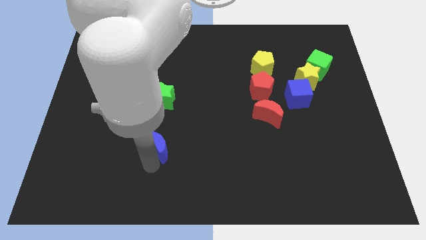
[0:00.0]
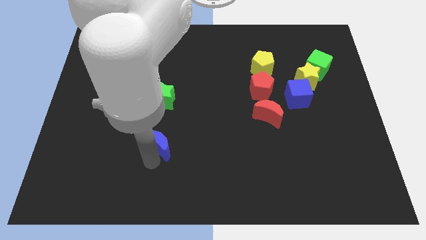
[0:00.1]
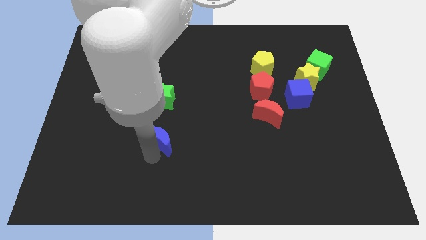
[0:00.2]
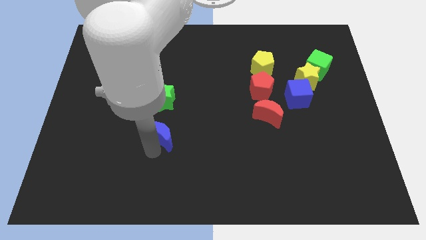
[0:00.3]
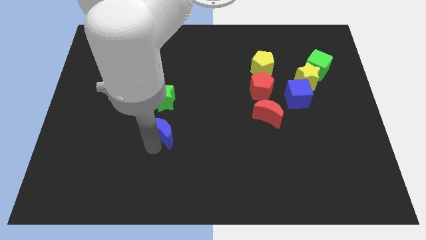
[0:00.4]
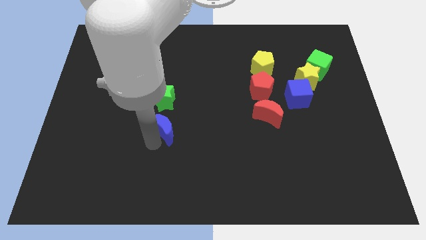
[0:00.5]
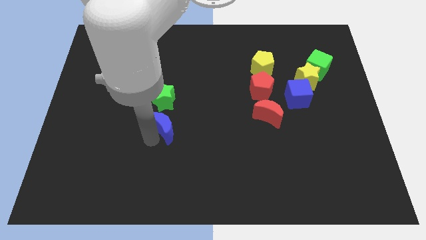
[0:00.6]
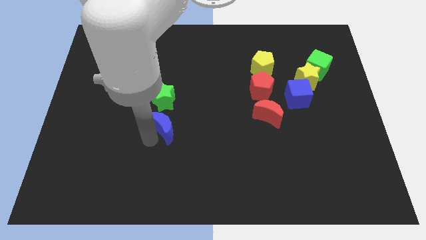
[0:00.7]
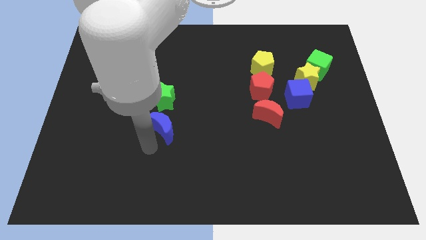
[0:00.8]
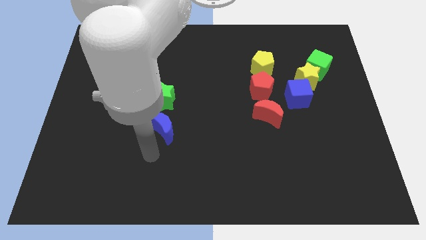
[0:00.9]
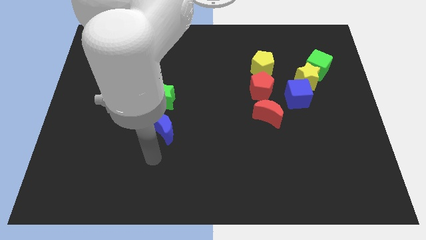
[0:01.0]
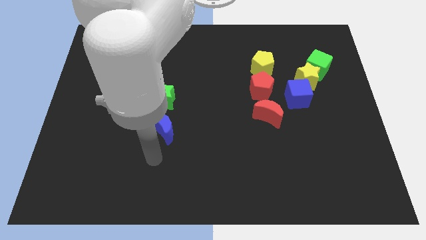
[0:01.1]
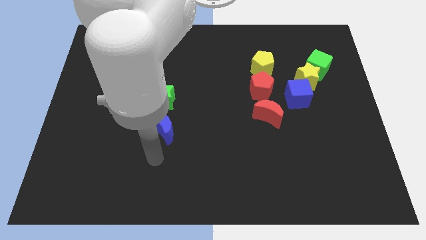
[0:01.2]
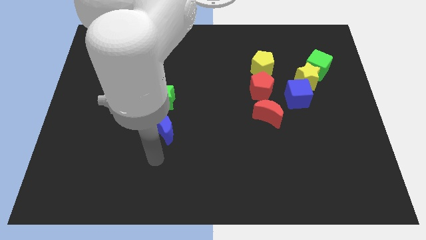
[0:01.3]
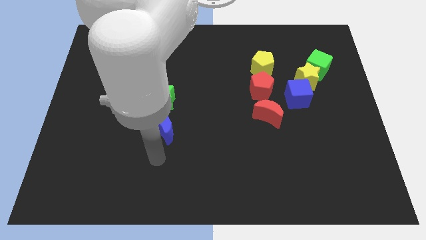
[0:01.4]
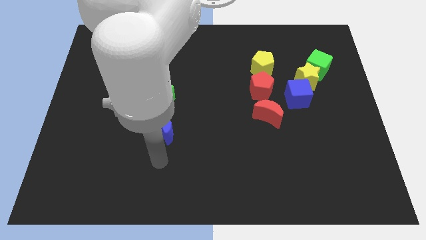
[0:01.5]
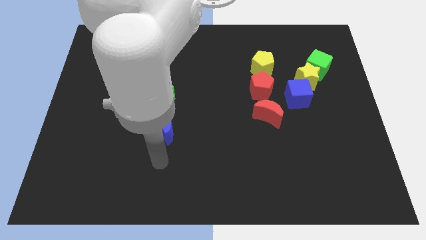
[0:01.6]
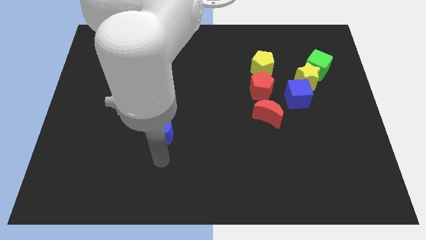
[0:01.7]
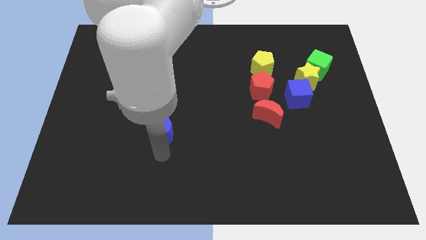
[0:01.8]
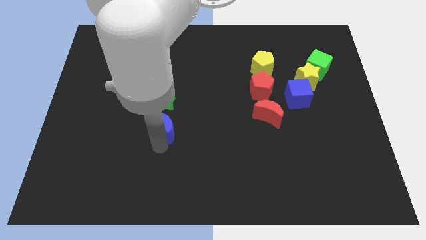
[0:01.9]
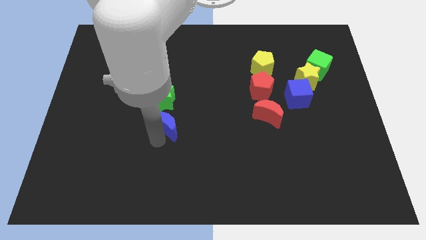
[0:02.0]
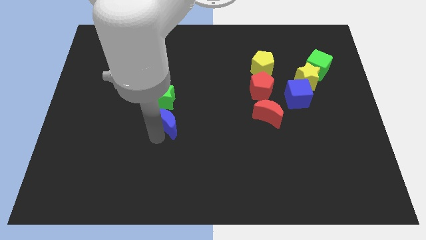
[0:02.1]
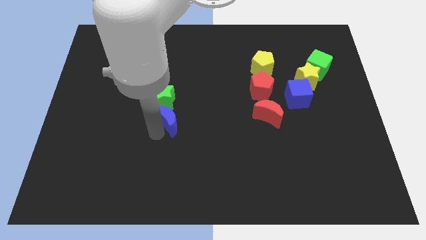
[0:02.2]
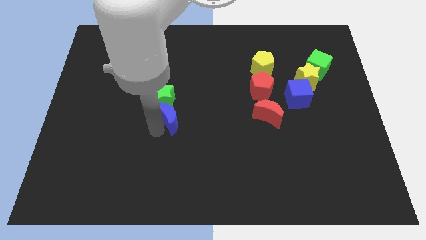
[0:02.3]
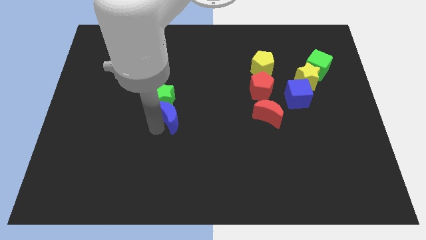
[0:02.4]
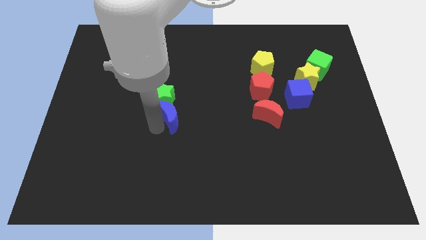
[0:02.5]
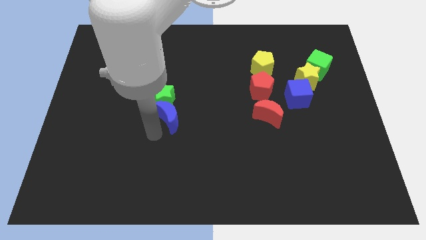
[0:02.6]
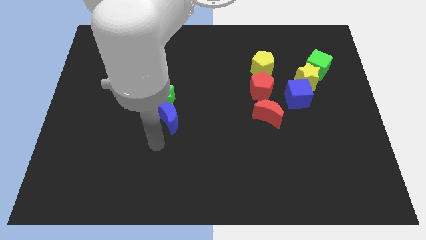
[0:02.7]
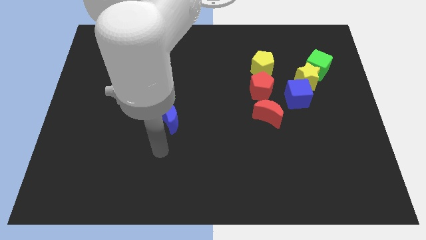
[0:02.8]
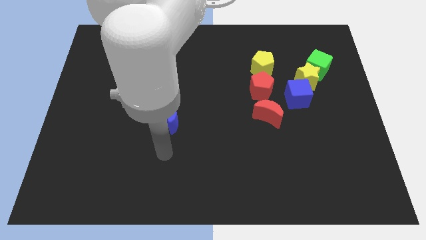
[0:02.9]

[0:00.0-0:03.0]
push the blue crescent below into the green star

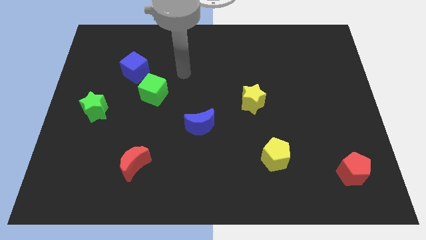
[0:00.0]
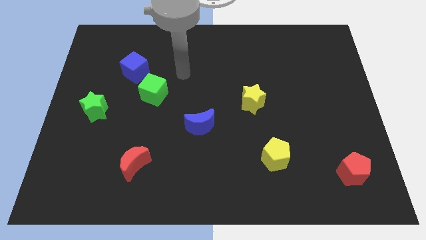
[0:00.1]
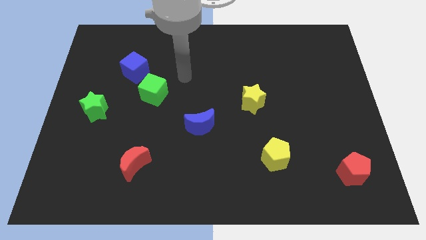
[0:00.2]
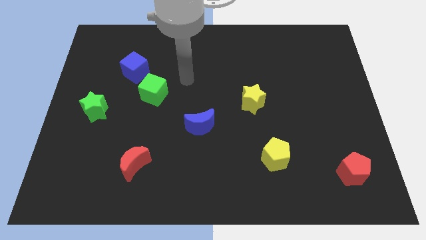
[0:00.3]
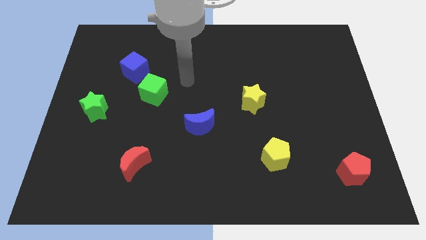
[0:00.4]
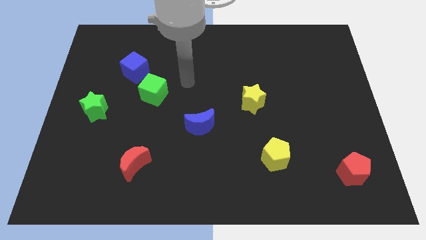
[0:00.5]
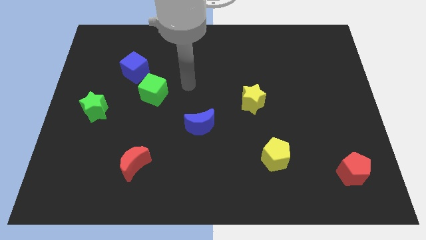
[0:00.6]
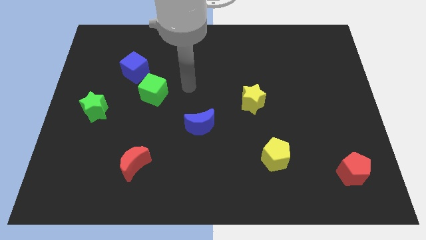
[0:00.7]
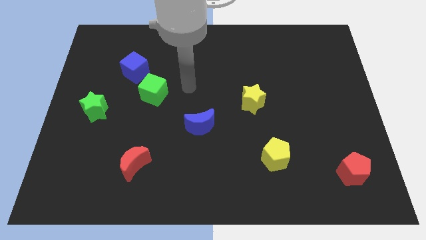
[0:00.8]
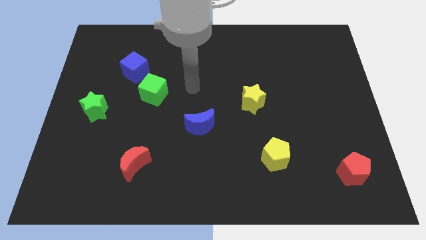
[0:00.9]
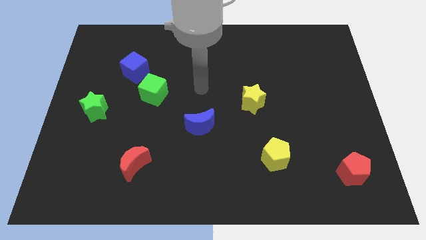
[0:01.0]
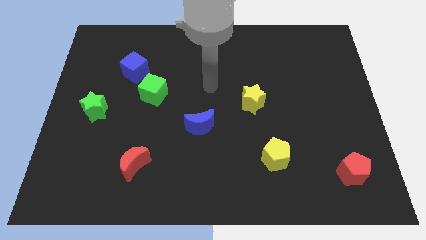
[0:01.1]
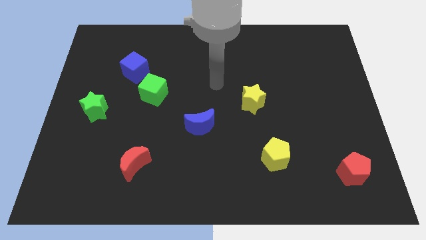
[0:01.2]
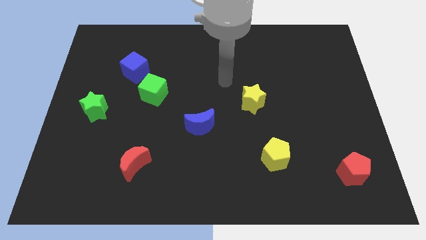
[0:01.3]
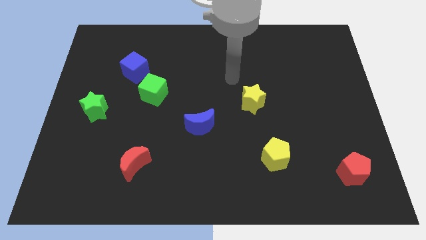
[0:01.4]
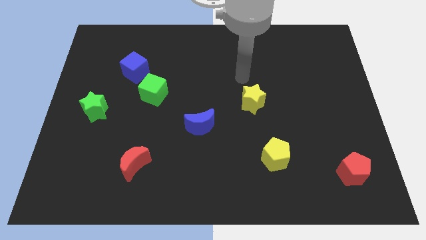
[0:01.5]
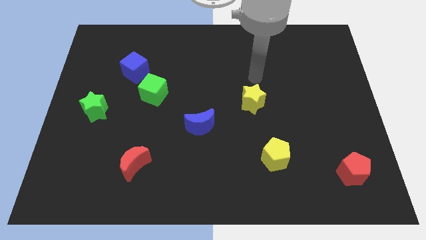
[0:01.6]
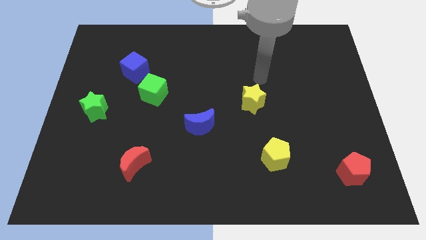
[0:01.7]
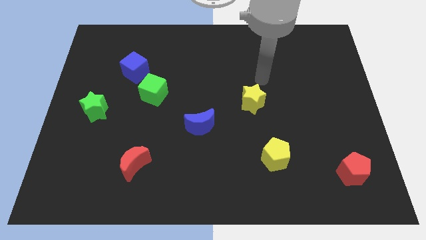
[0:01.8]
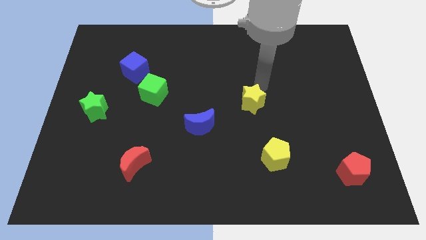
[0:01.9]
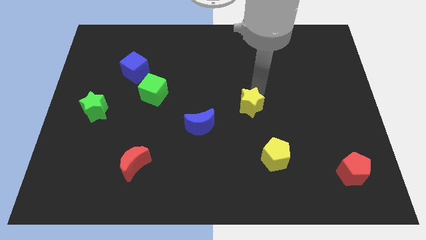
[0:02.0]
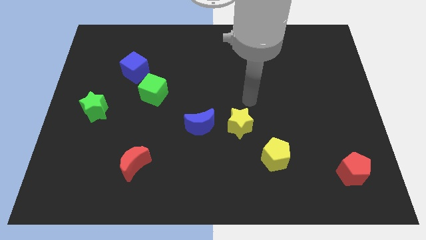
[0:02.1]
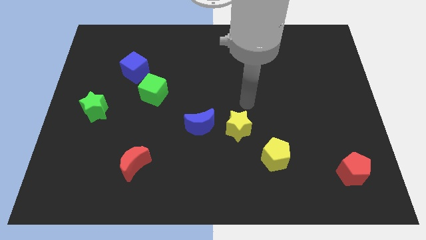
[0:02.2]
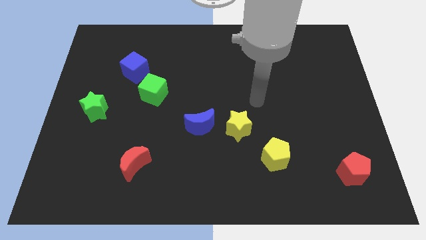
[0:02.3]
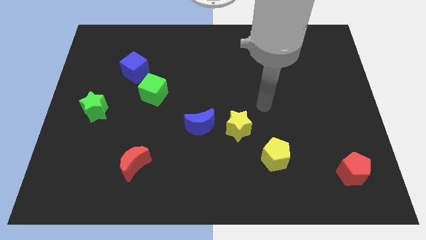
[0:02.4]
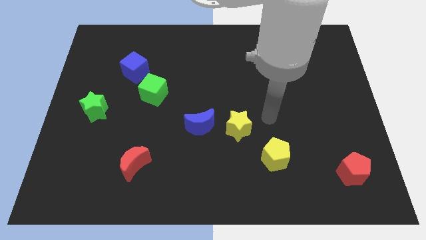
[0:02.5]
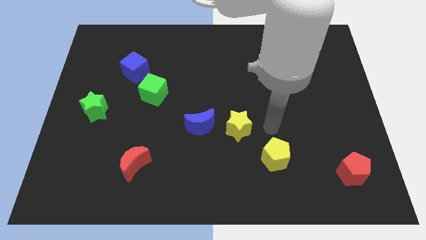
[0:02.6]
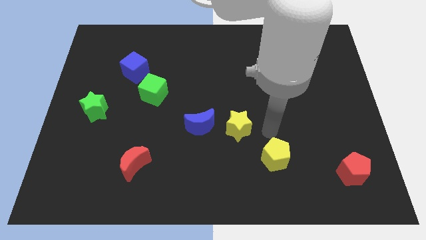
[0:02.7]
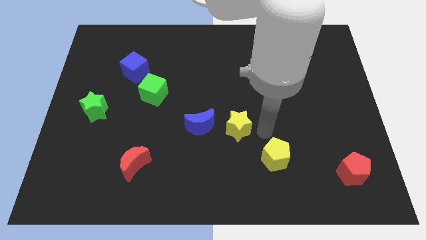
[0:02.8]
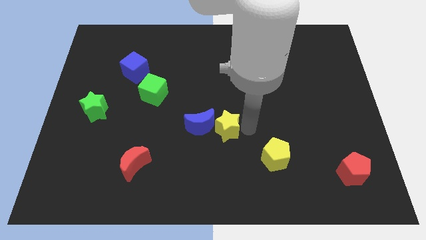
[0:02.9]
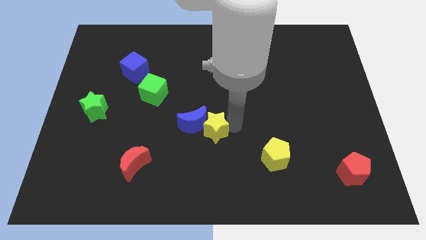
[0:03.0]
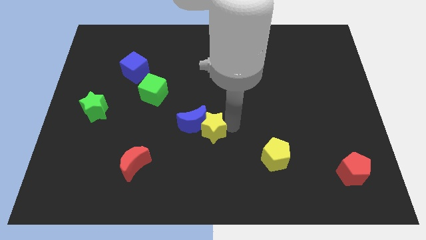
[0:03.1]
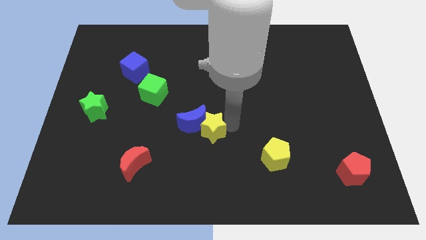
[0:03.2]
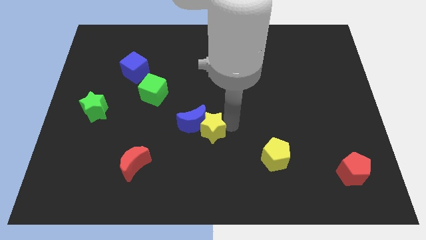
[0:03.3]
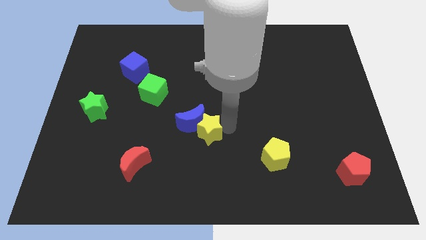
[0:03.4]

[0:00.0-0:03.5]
place the yellow star to the bottom right side of the blue crescent

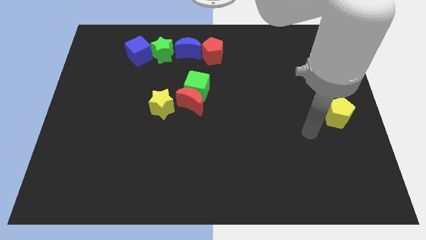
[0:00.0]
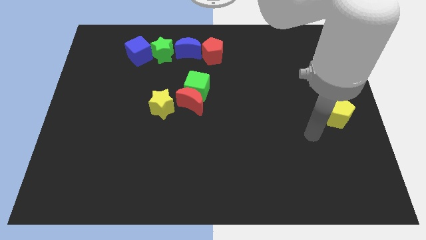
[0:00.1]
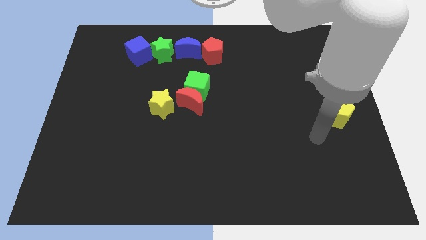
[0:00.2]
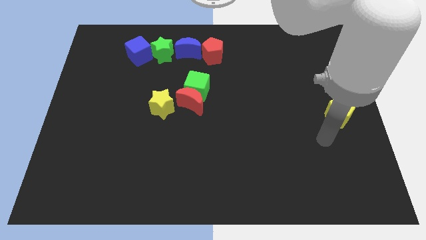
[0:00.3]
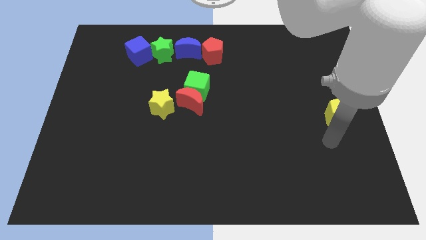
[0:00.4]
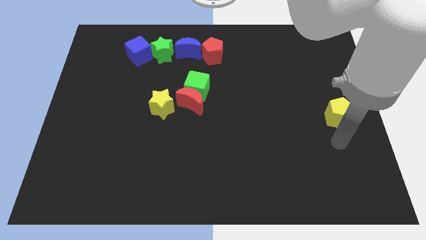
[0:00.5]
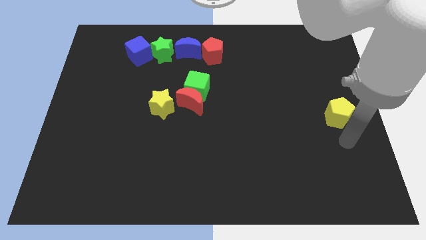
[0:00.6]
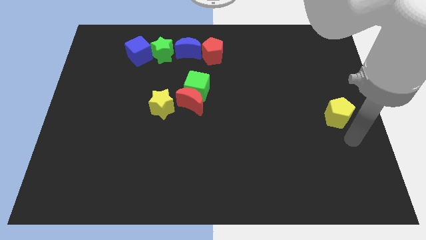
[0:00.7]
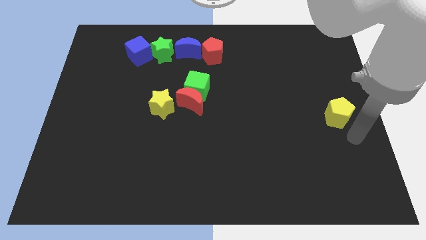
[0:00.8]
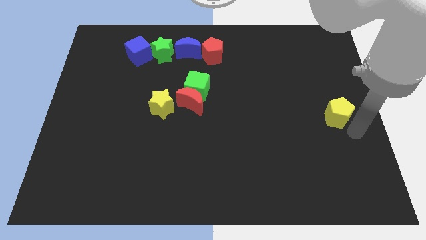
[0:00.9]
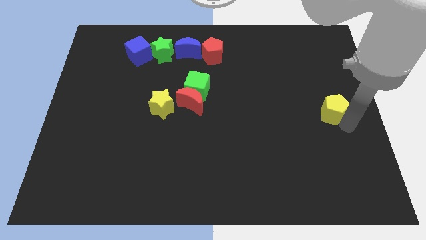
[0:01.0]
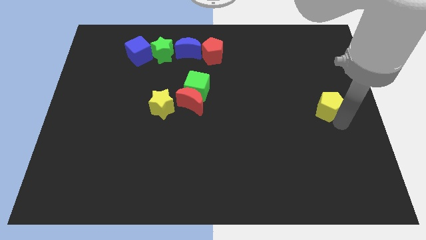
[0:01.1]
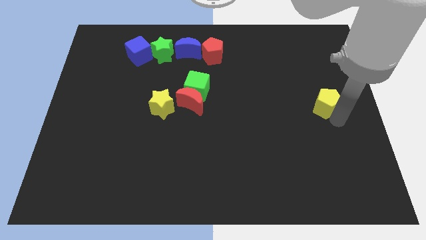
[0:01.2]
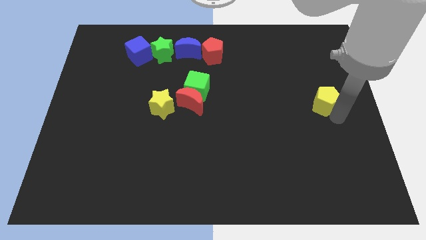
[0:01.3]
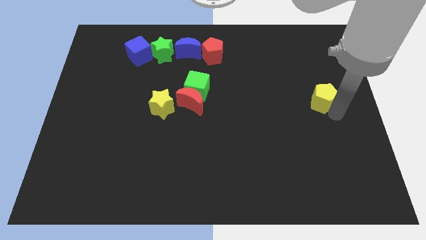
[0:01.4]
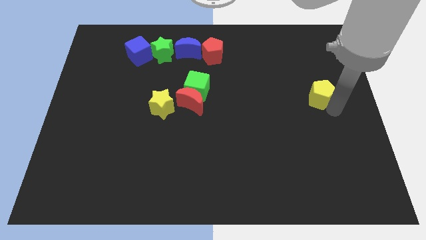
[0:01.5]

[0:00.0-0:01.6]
push yellow pentagon towards vertical bottom right of the red pentagon

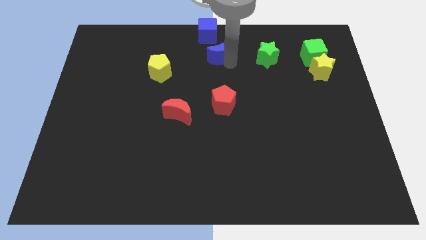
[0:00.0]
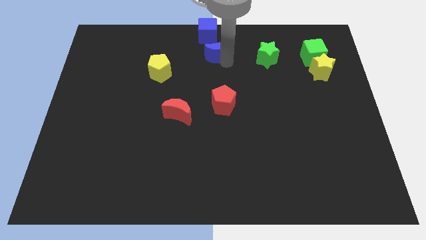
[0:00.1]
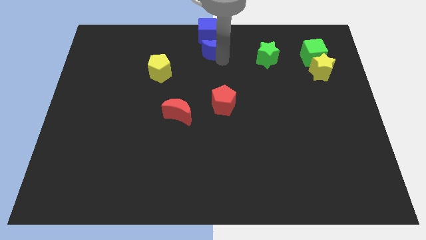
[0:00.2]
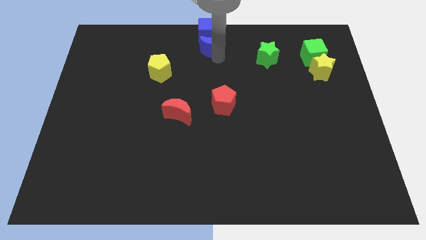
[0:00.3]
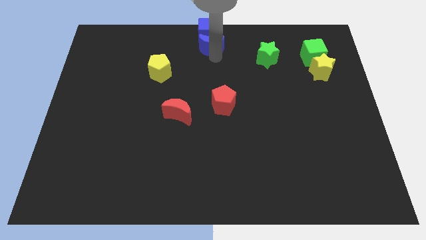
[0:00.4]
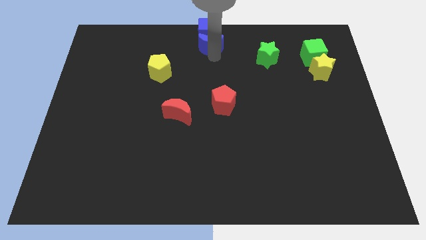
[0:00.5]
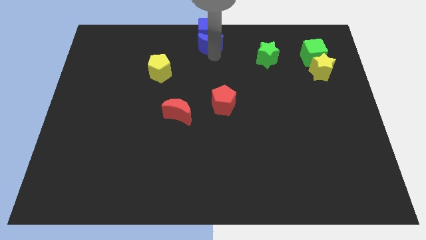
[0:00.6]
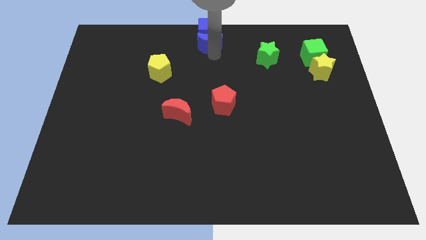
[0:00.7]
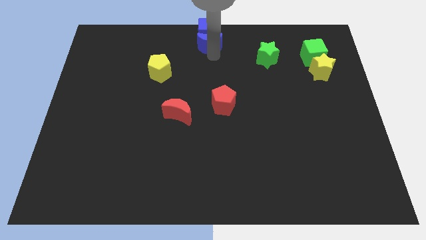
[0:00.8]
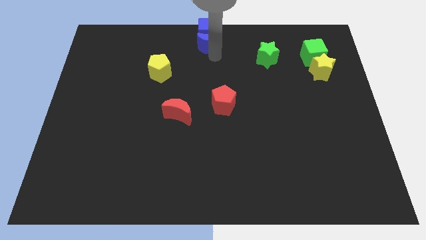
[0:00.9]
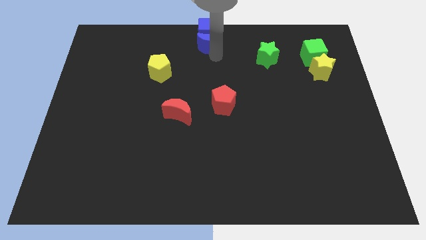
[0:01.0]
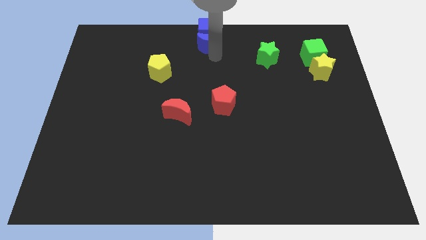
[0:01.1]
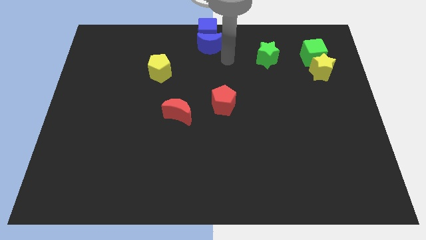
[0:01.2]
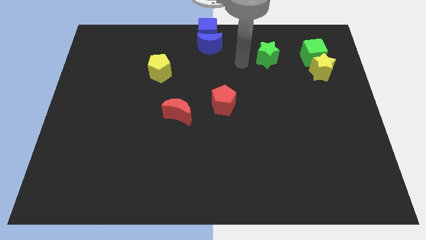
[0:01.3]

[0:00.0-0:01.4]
push the blue moon into the blue cube
